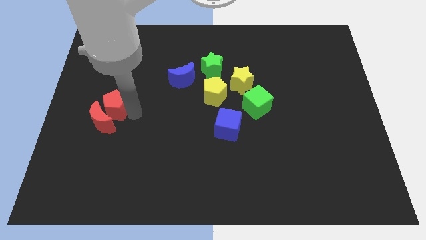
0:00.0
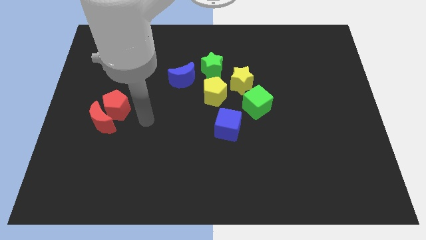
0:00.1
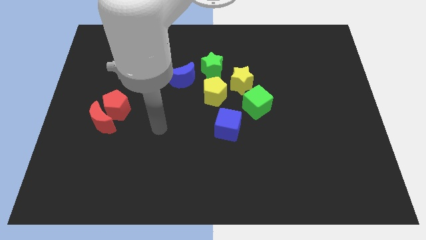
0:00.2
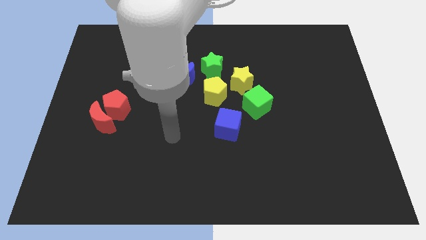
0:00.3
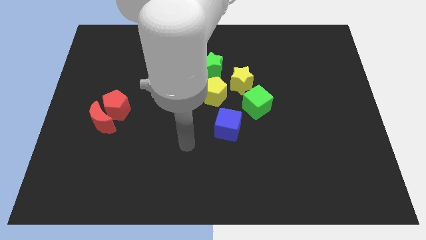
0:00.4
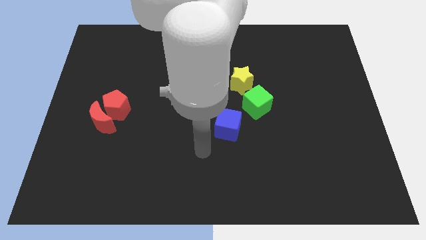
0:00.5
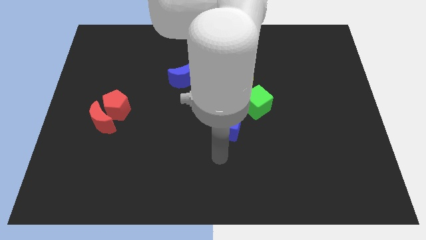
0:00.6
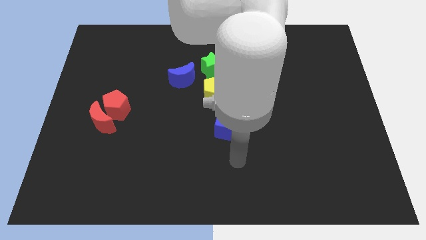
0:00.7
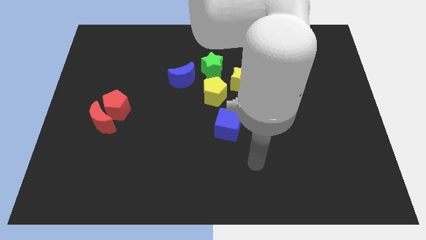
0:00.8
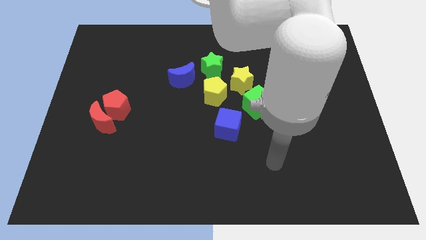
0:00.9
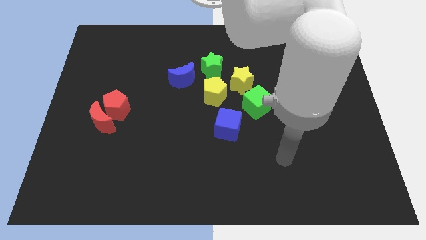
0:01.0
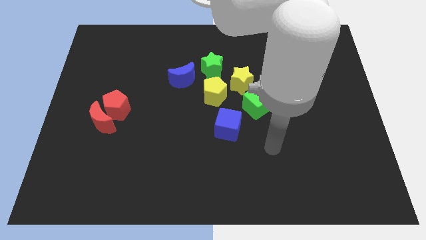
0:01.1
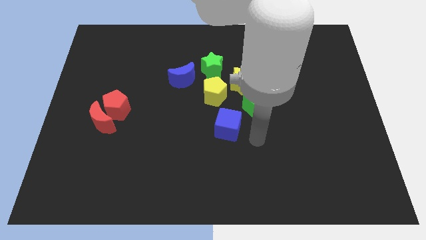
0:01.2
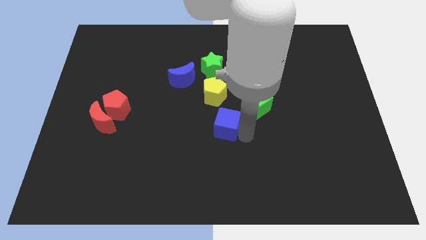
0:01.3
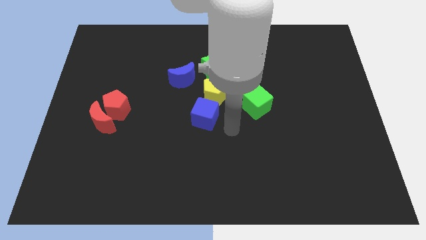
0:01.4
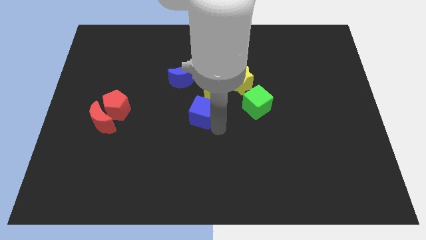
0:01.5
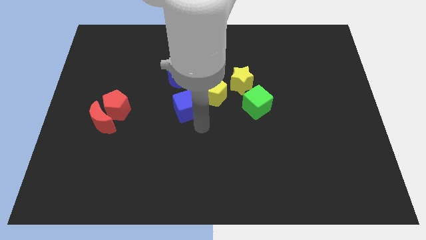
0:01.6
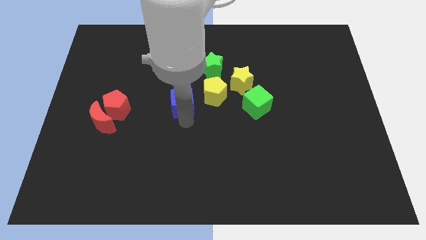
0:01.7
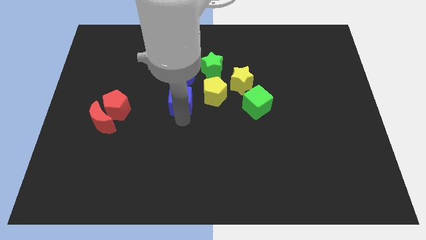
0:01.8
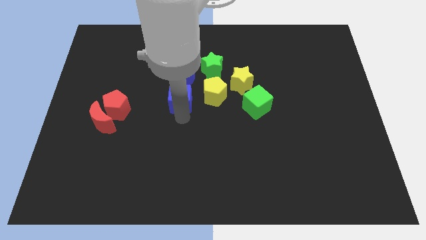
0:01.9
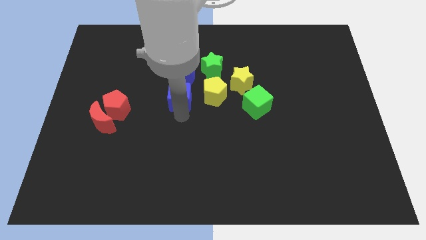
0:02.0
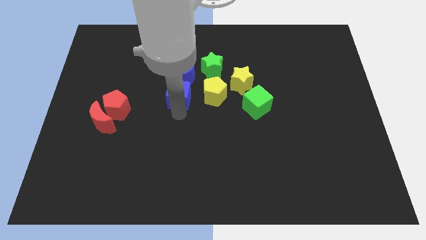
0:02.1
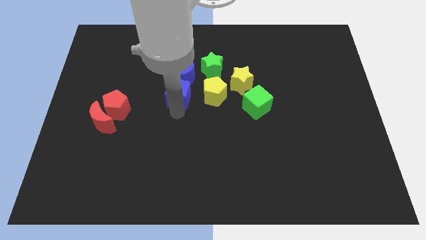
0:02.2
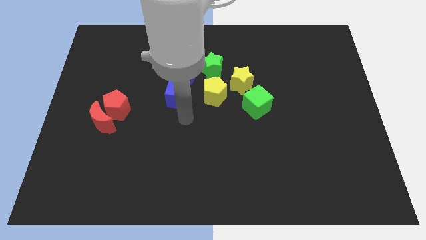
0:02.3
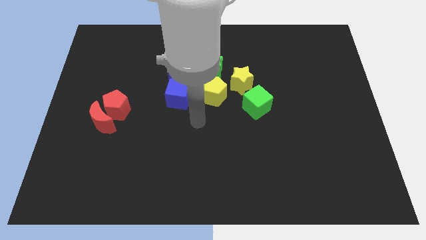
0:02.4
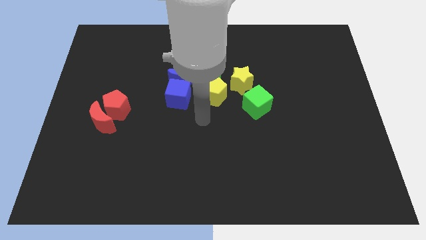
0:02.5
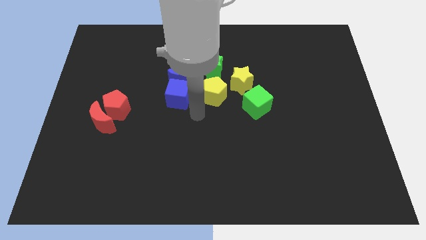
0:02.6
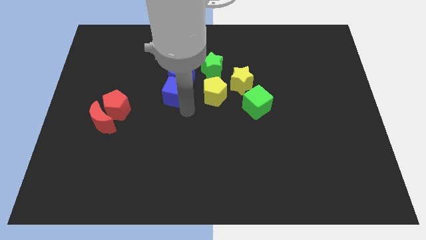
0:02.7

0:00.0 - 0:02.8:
move the blue cube down to the blue moon

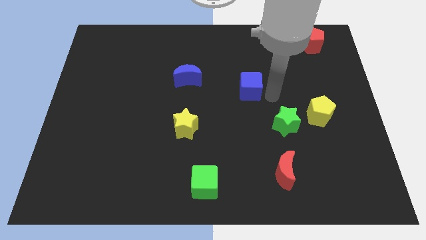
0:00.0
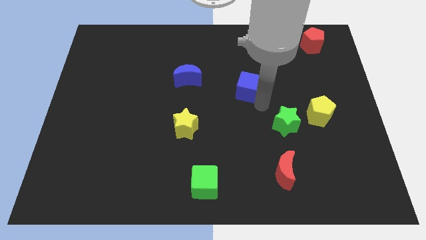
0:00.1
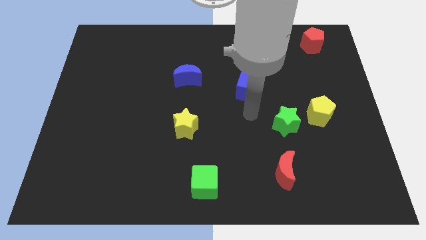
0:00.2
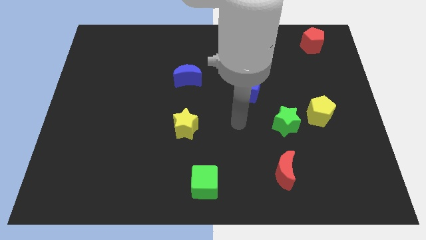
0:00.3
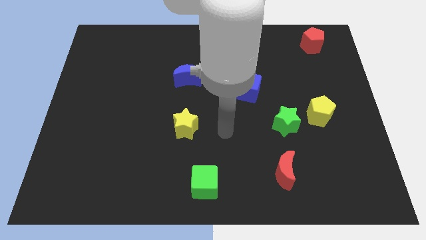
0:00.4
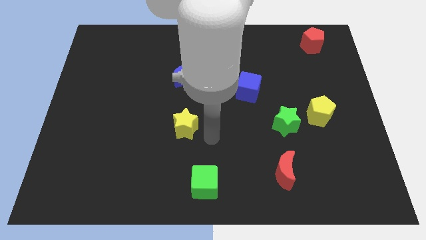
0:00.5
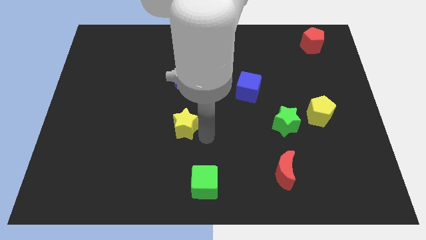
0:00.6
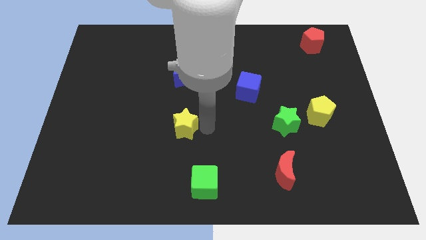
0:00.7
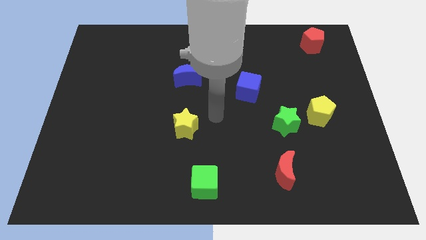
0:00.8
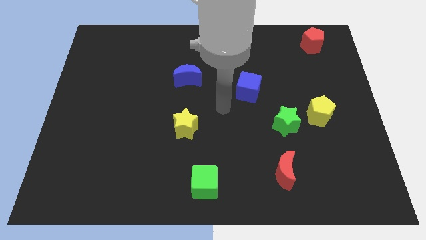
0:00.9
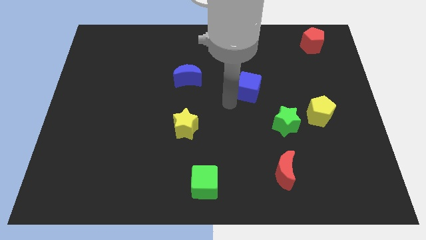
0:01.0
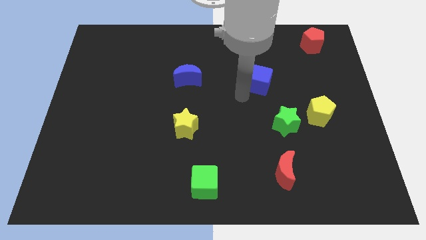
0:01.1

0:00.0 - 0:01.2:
slightly push the blue cube

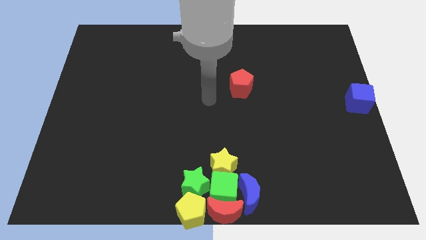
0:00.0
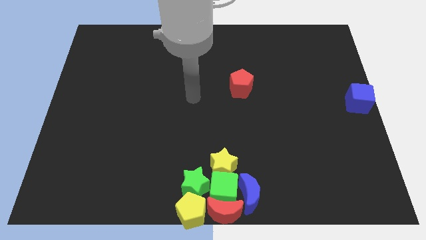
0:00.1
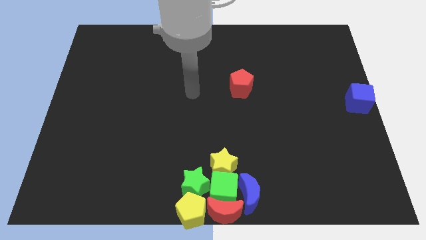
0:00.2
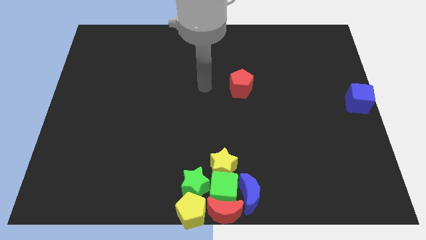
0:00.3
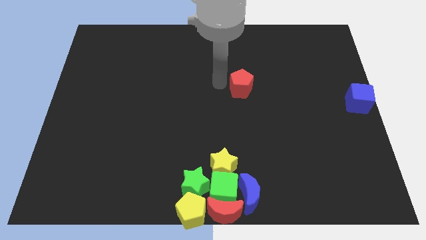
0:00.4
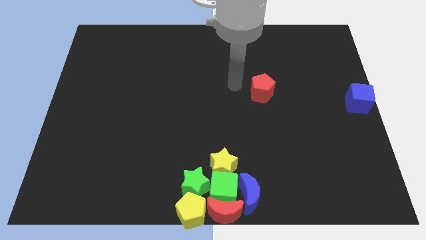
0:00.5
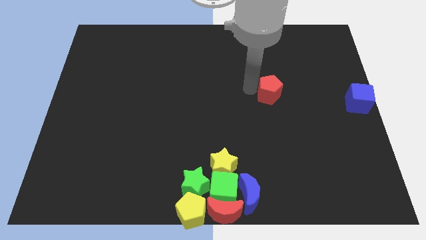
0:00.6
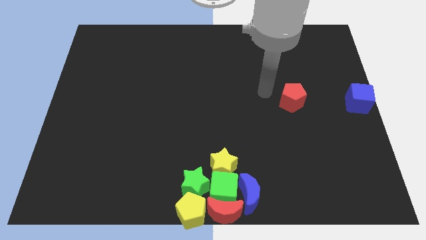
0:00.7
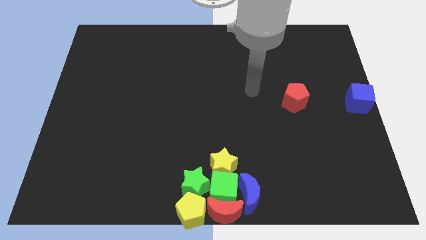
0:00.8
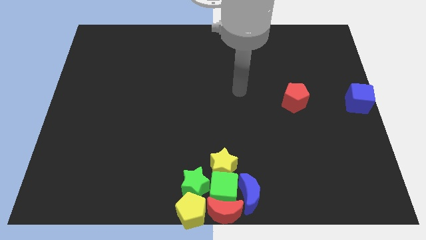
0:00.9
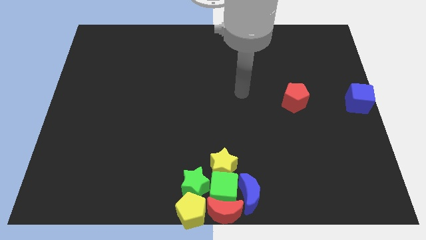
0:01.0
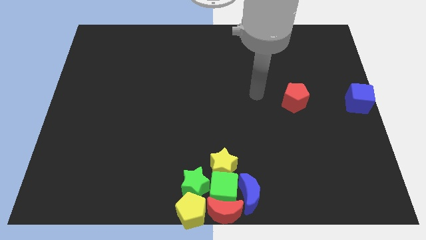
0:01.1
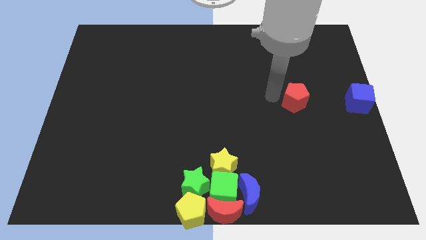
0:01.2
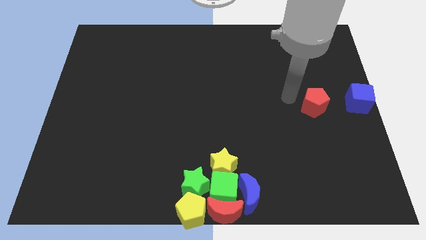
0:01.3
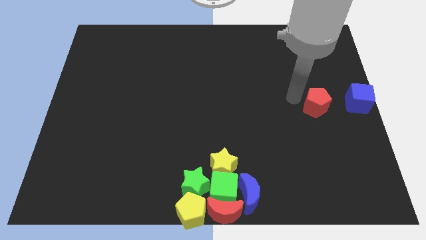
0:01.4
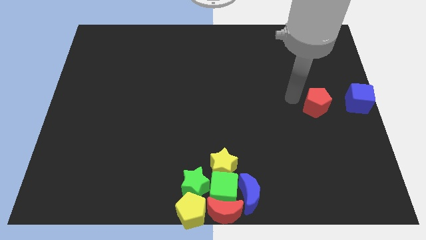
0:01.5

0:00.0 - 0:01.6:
push the red pentagon slightly towards the blue cube

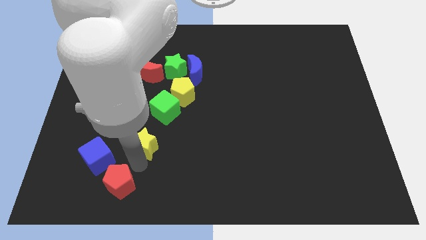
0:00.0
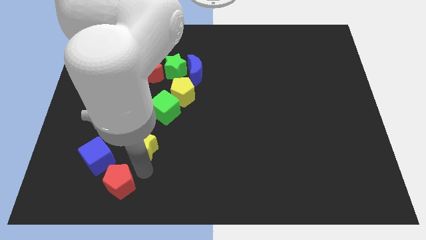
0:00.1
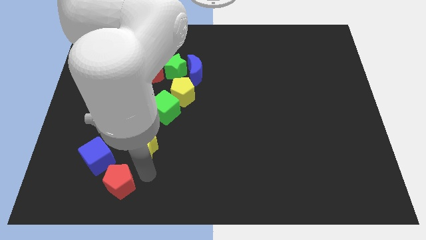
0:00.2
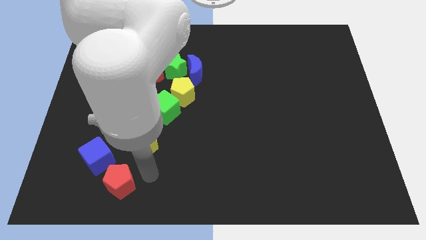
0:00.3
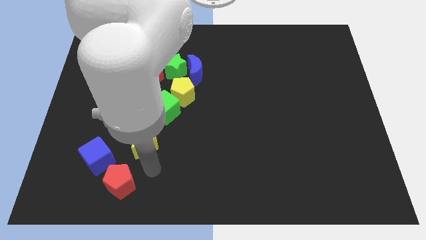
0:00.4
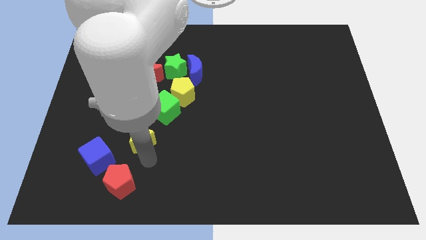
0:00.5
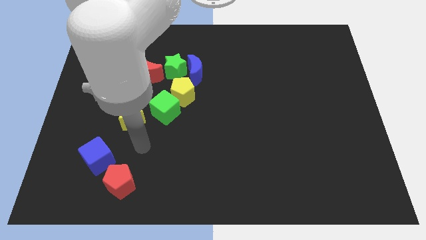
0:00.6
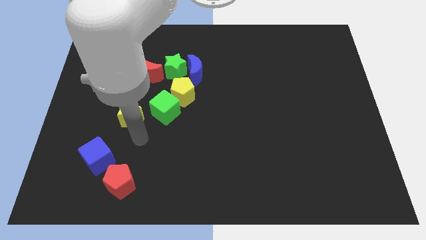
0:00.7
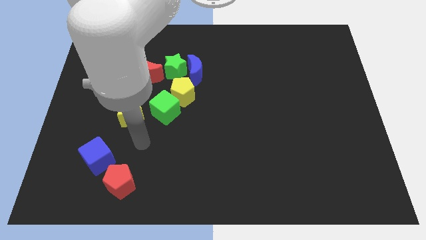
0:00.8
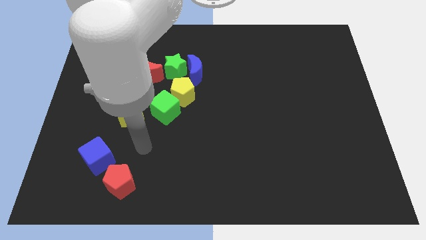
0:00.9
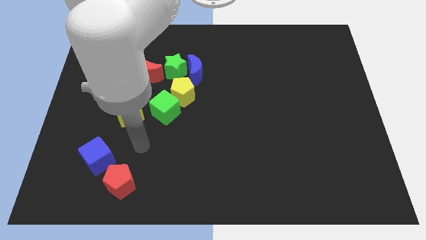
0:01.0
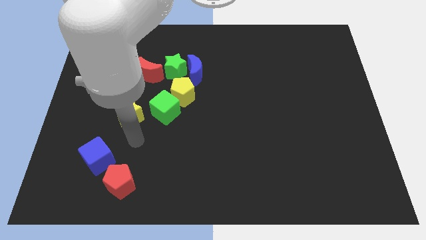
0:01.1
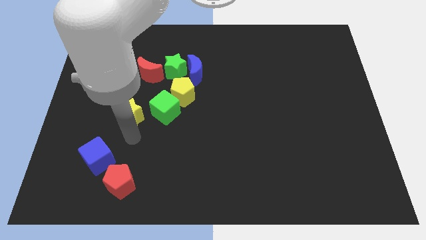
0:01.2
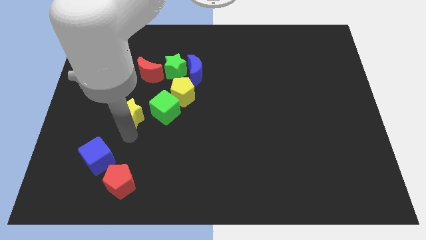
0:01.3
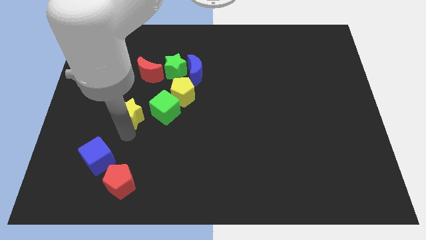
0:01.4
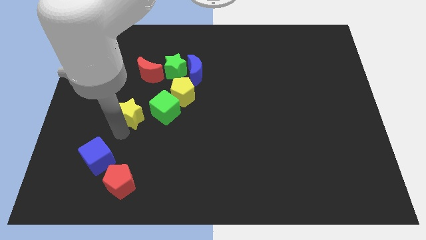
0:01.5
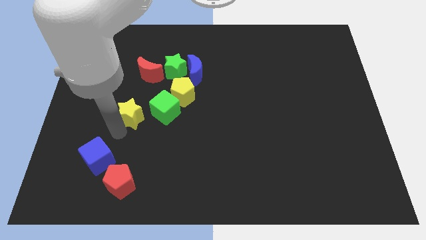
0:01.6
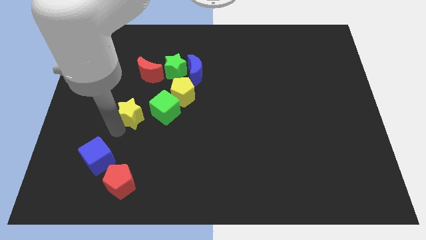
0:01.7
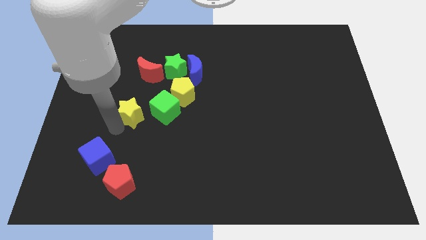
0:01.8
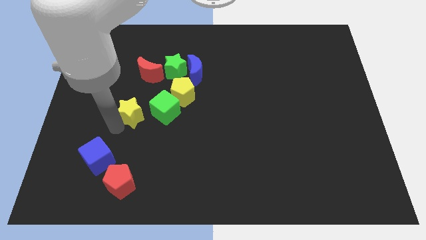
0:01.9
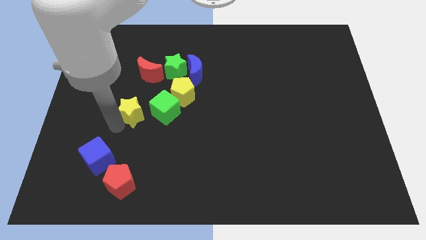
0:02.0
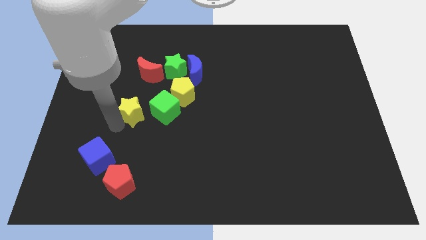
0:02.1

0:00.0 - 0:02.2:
push the yellow star towards the left of the green cube

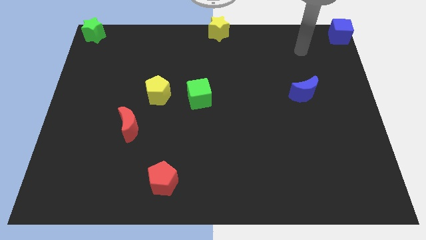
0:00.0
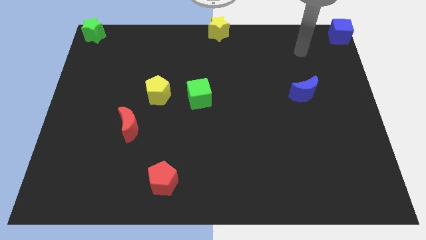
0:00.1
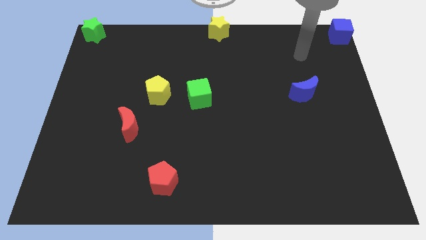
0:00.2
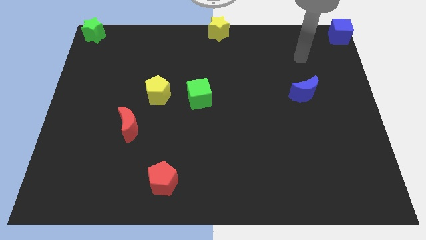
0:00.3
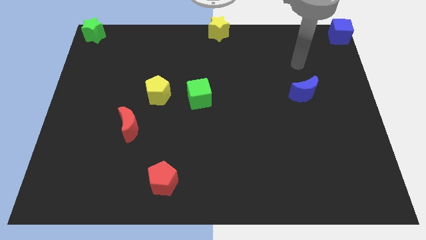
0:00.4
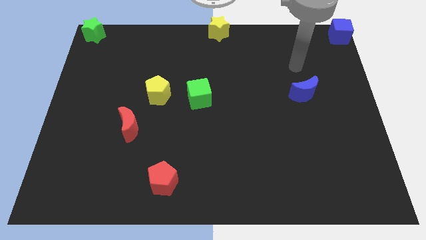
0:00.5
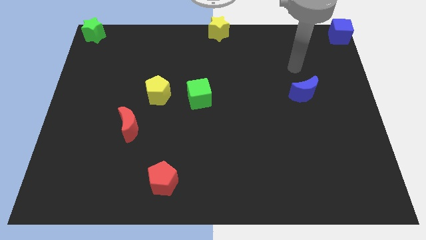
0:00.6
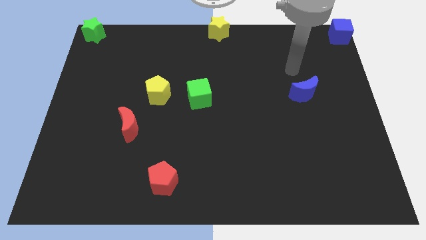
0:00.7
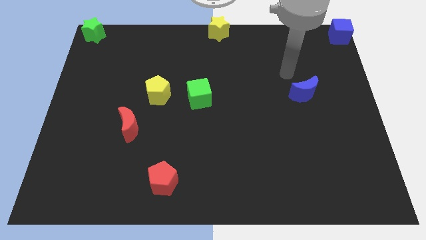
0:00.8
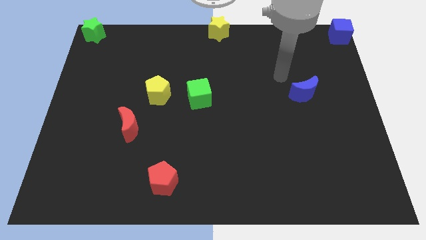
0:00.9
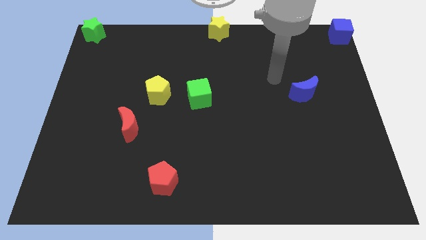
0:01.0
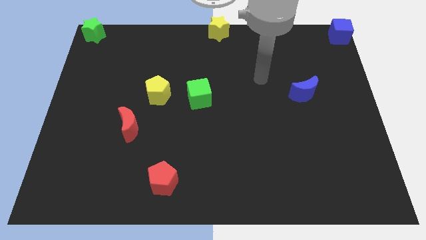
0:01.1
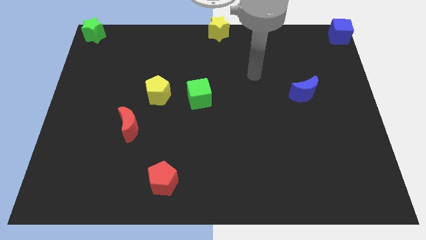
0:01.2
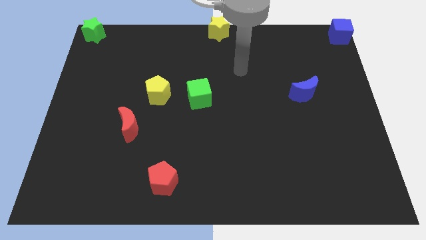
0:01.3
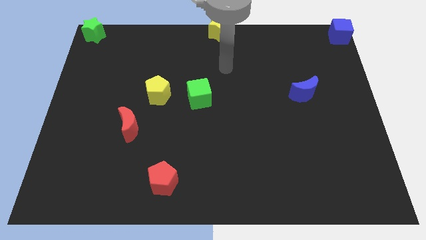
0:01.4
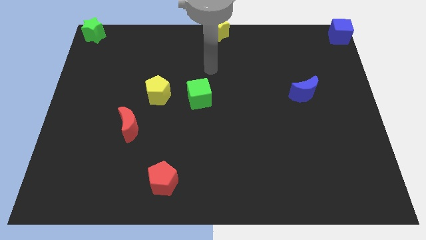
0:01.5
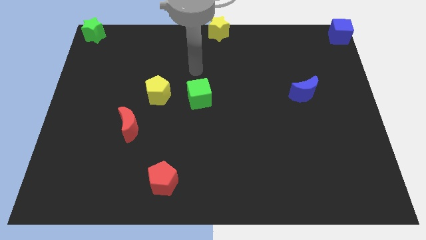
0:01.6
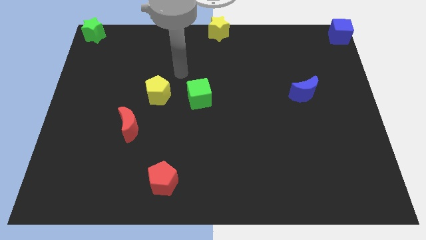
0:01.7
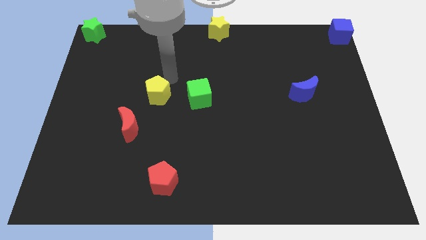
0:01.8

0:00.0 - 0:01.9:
put the arm above the yellow pentagon
